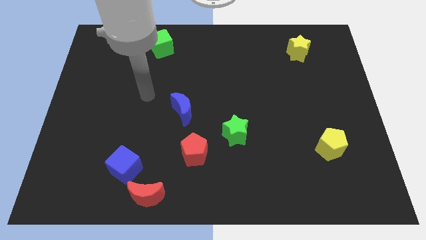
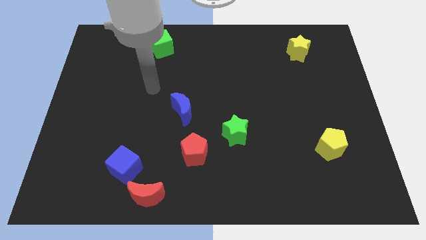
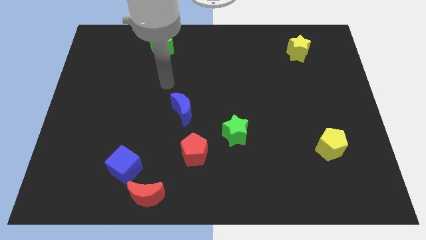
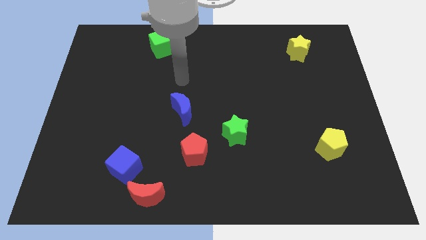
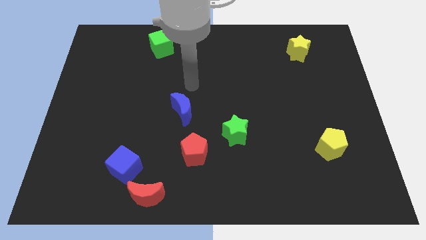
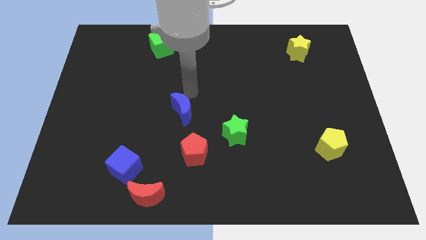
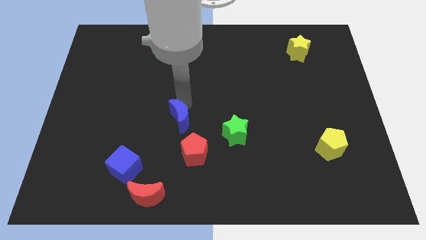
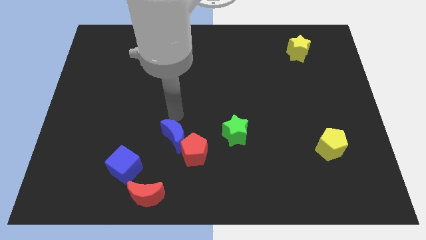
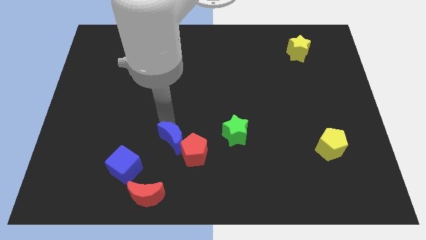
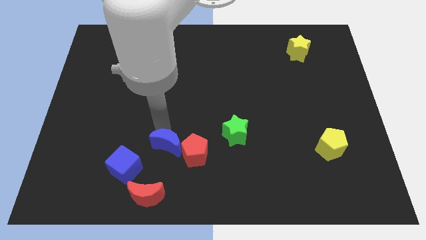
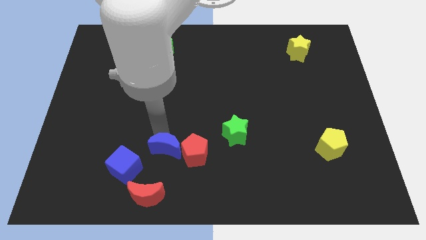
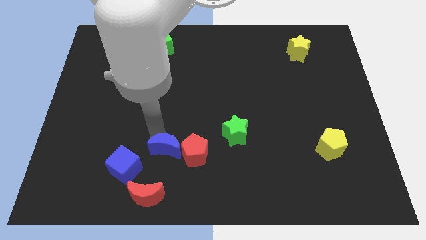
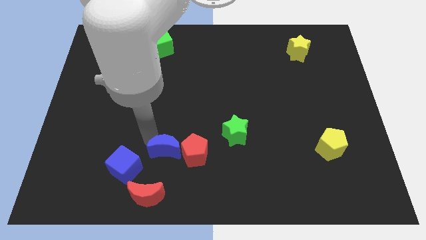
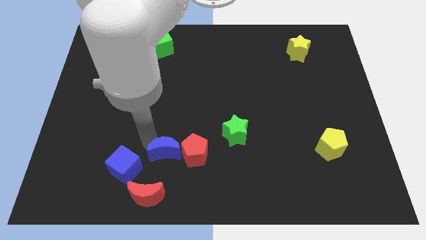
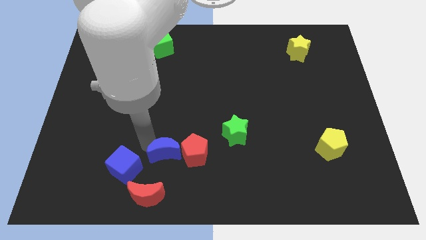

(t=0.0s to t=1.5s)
move blue moon to the left side of the red pentagon

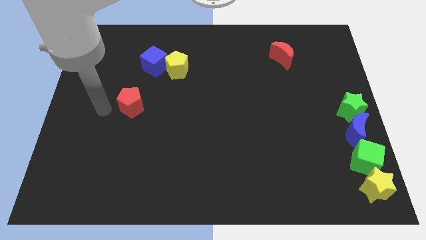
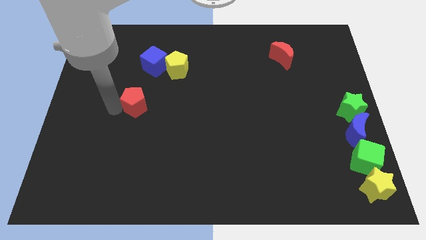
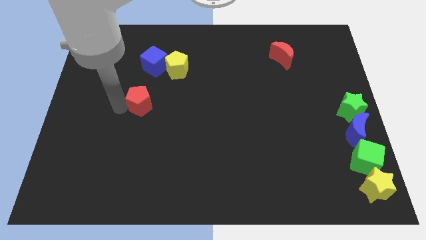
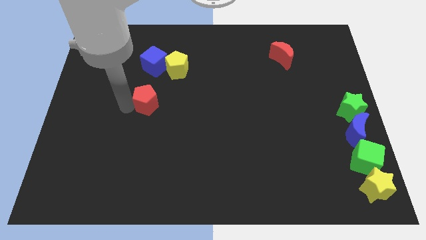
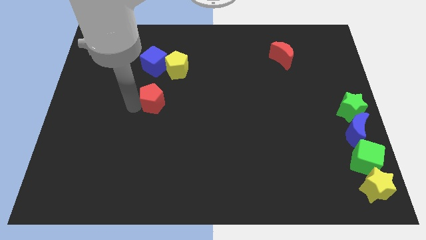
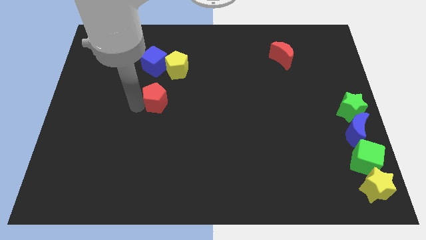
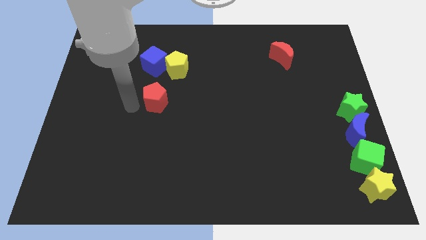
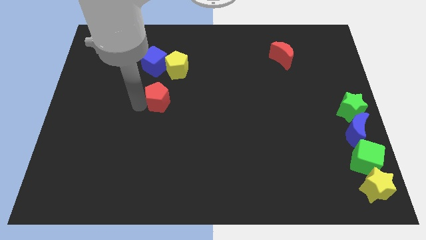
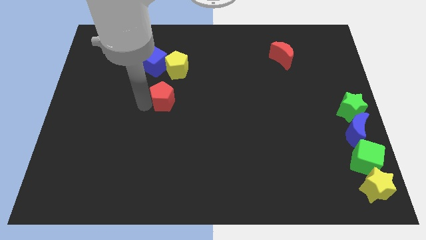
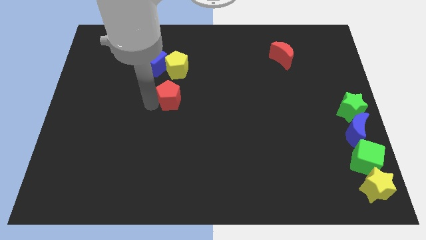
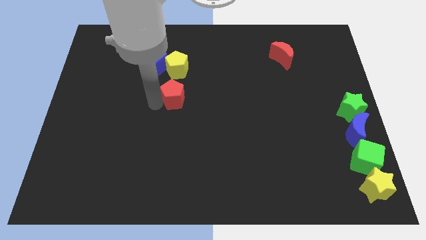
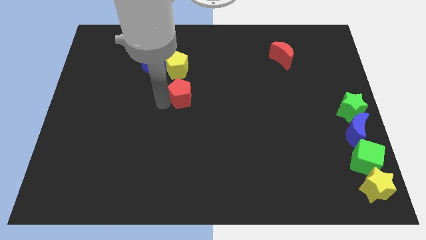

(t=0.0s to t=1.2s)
place red pentagon vertical to yellow pentagon

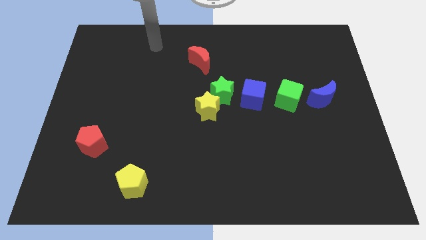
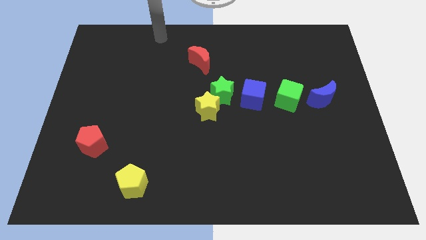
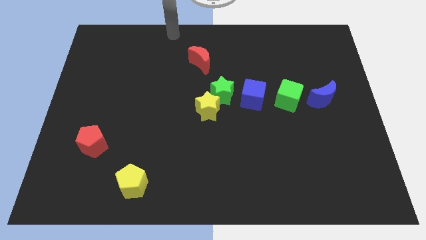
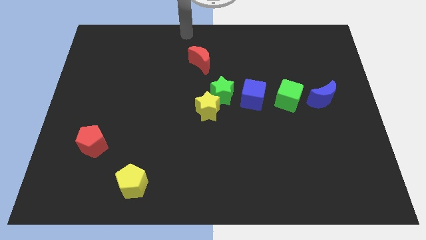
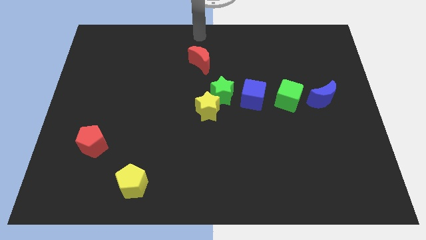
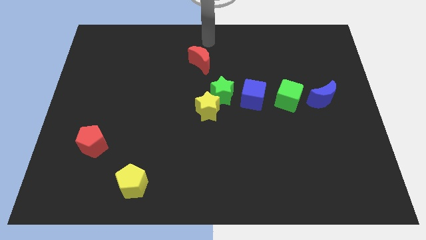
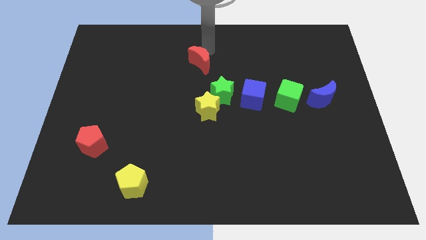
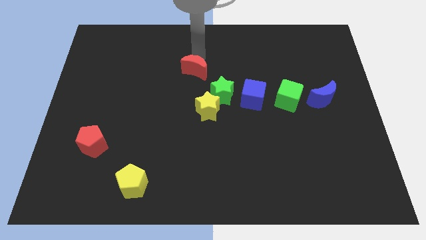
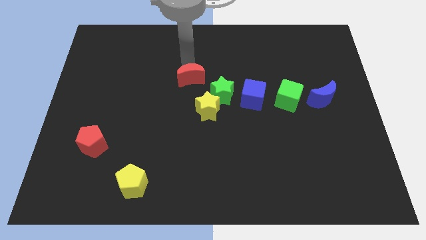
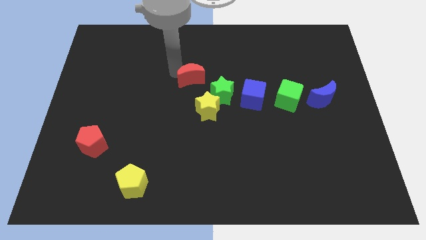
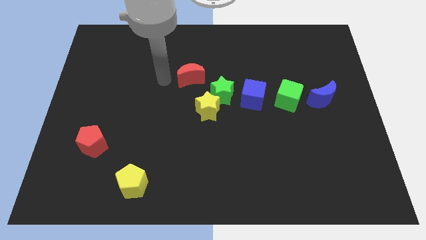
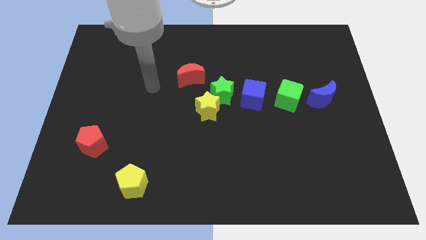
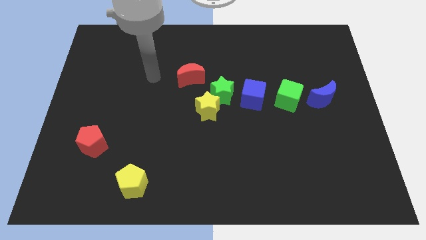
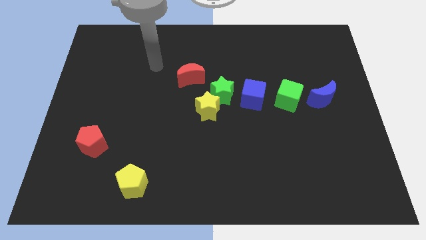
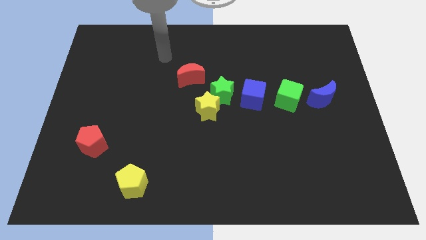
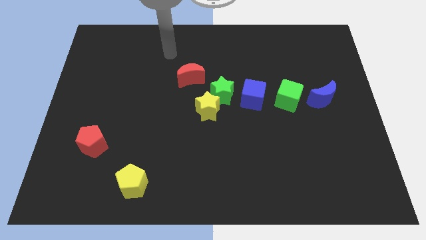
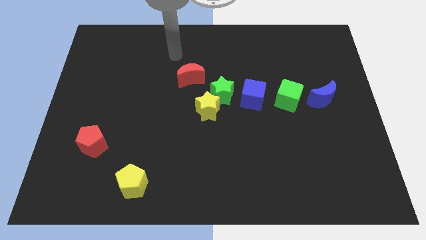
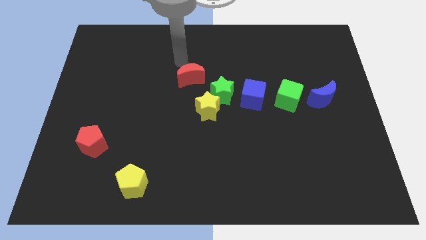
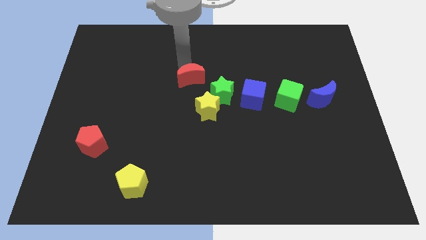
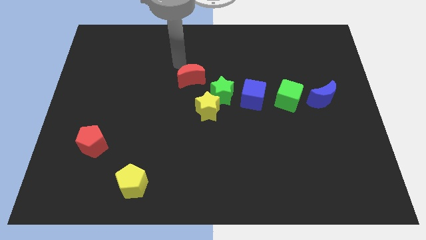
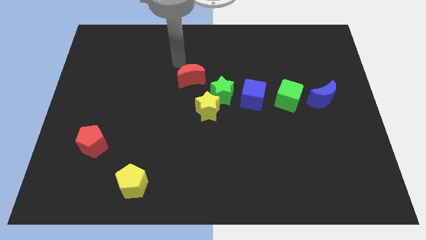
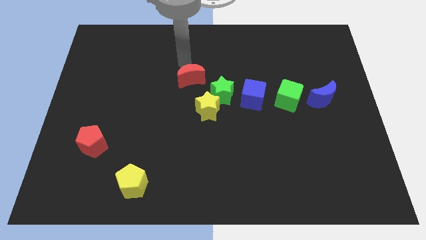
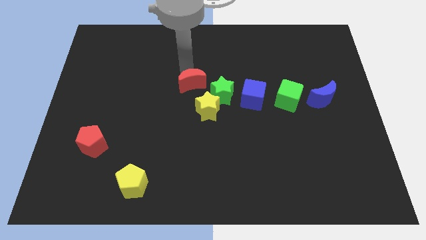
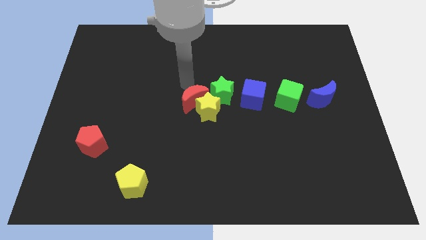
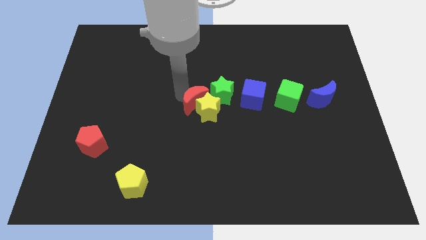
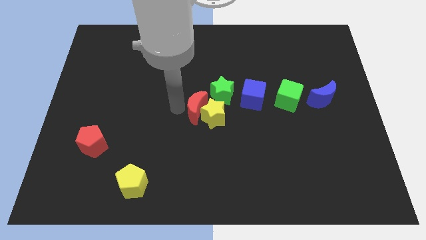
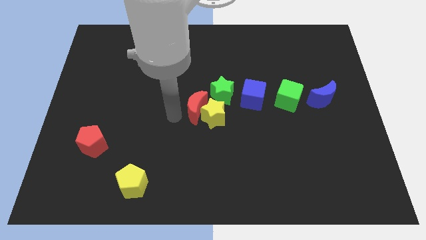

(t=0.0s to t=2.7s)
push red crescent into the yellow star

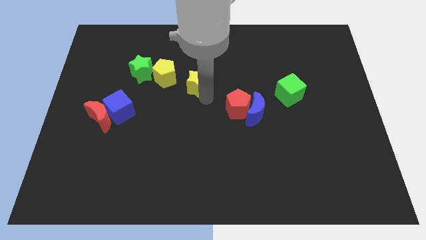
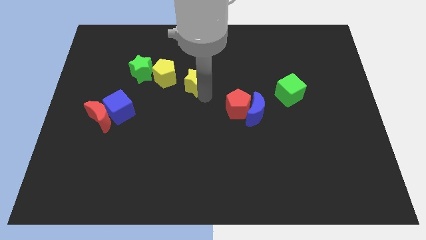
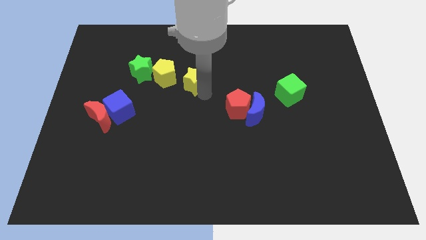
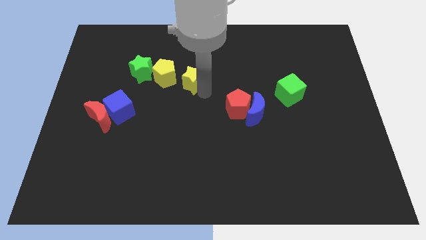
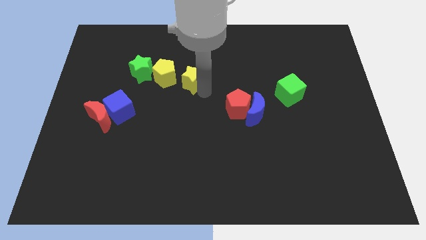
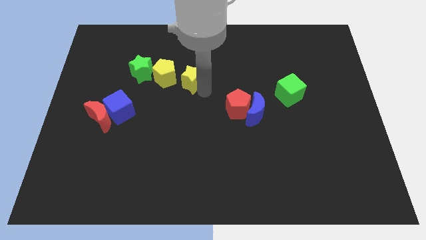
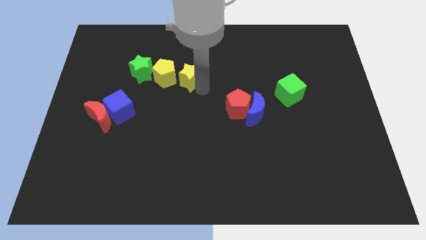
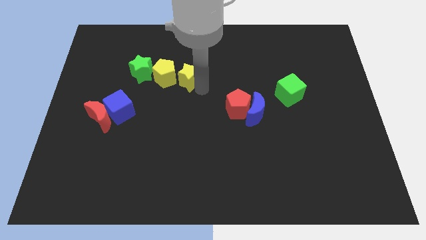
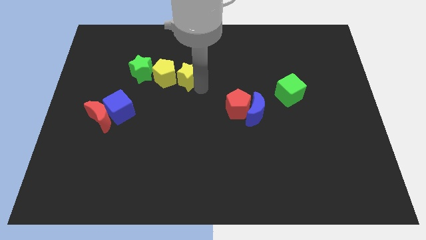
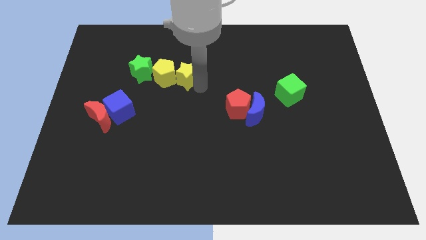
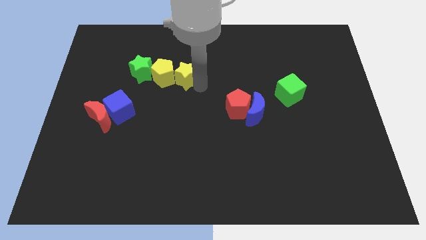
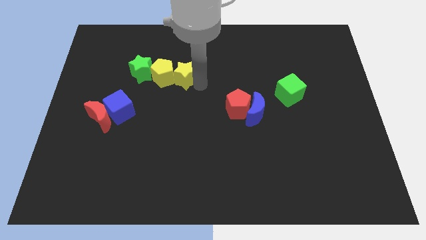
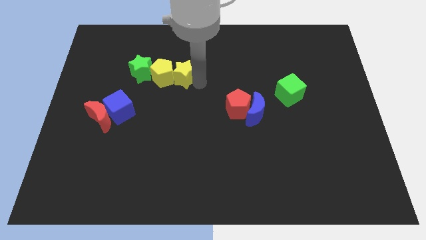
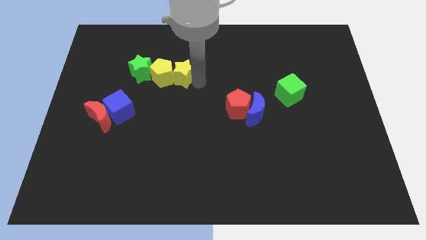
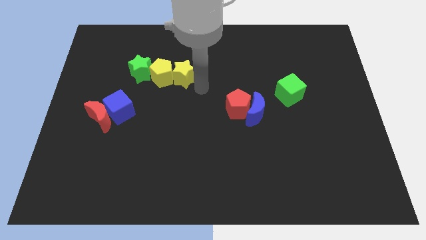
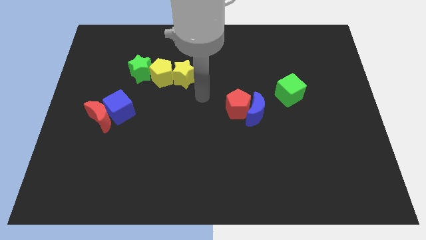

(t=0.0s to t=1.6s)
push the yellow star into the yellow pentagon

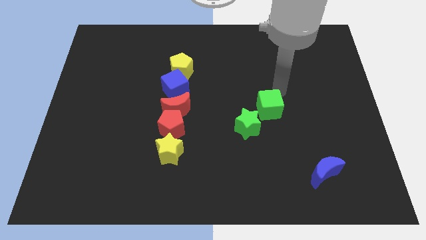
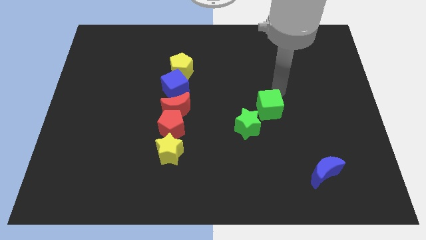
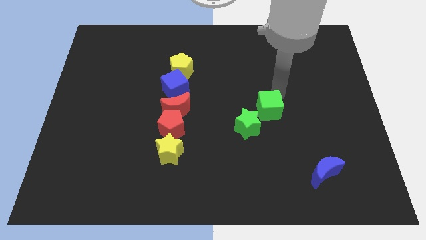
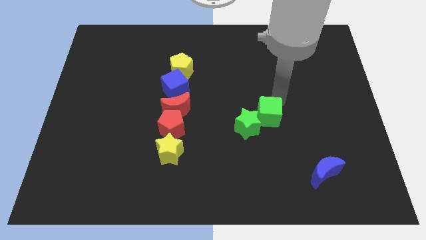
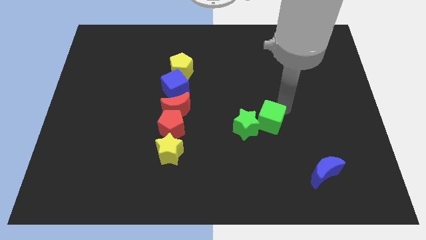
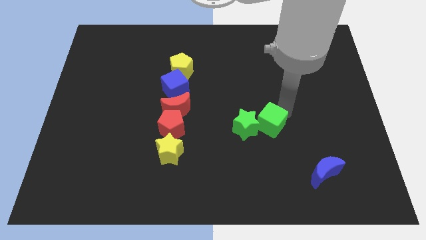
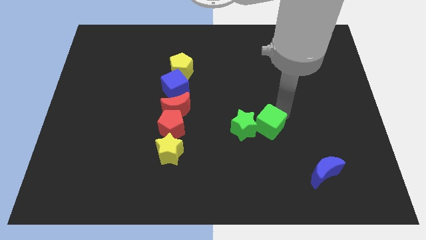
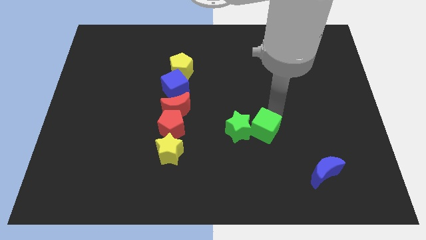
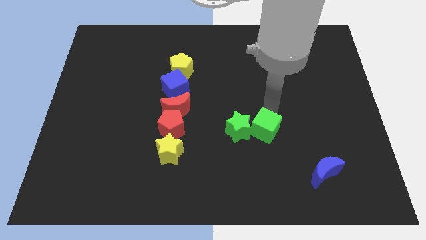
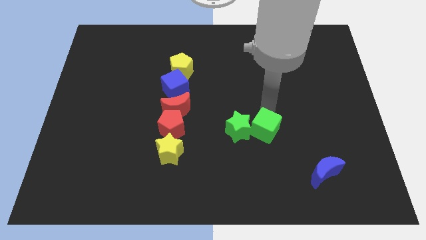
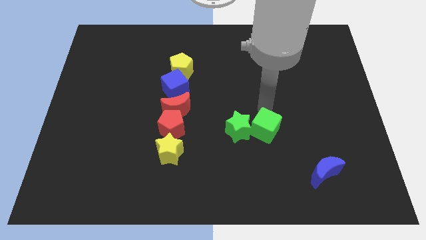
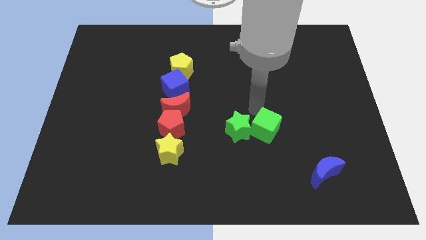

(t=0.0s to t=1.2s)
move the green cube to the right of the green star

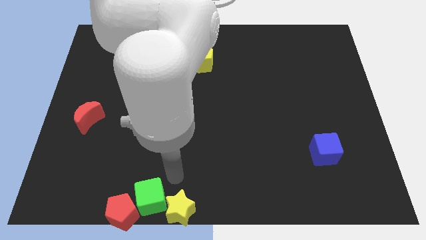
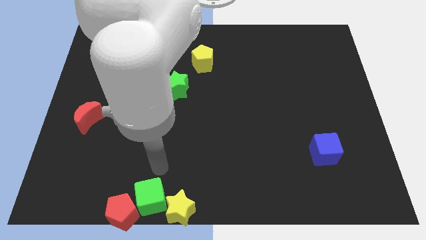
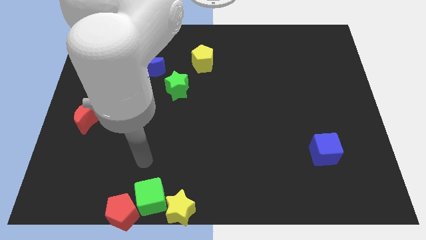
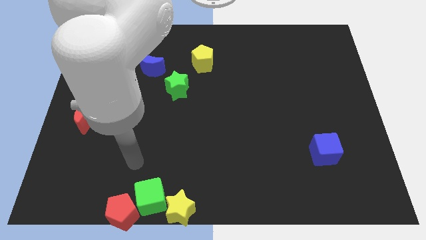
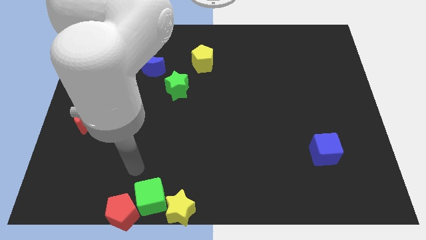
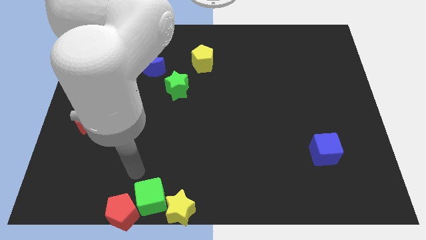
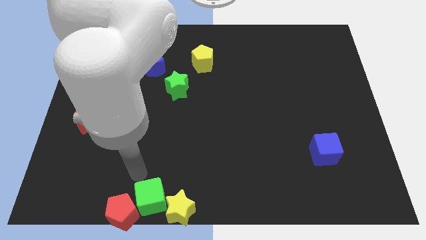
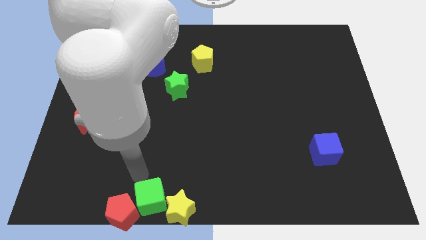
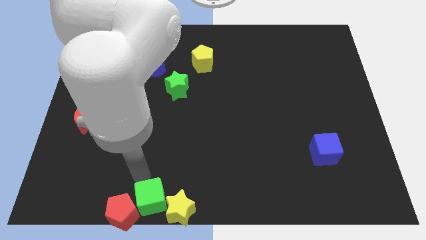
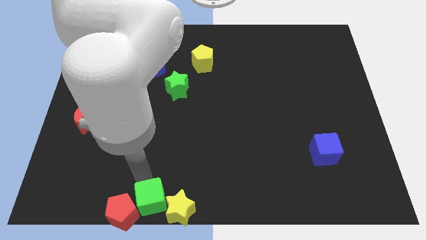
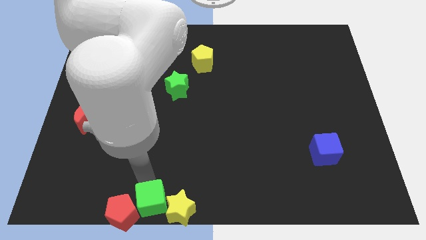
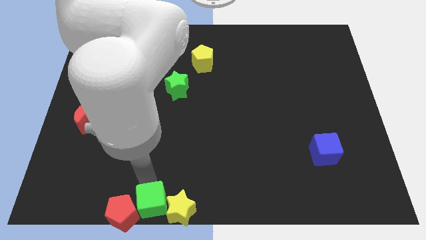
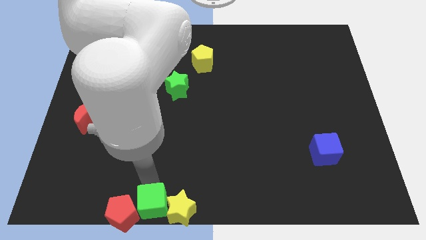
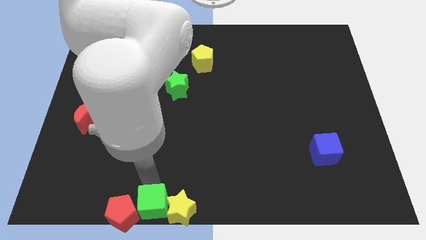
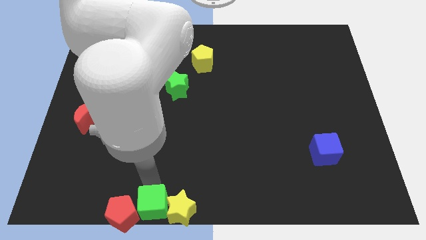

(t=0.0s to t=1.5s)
push the green cube slightly
